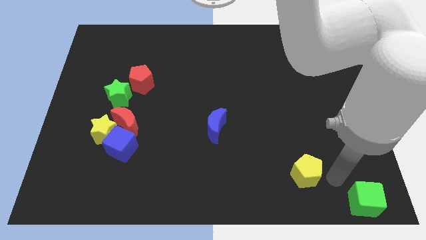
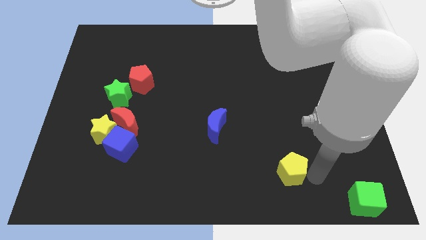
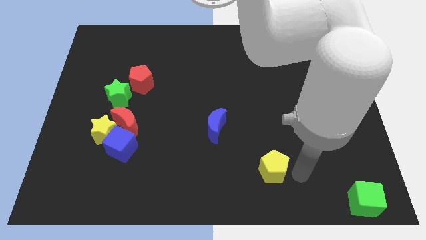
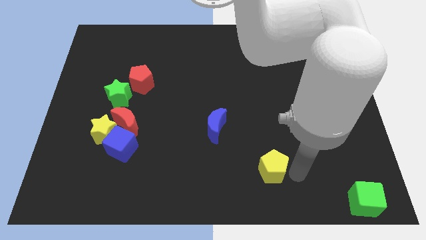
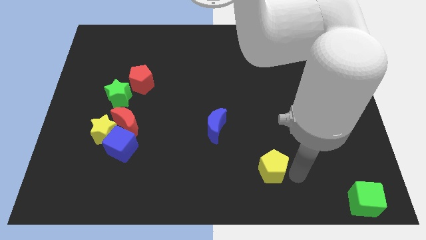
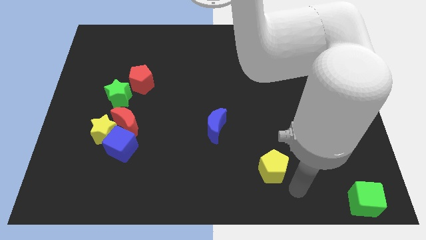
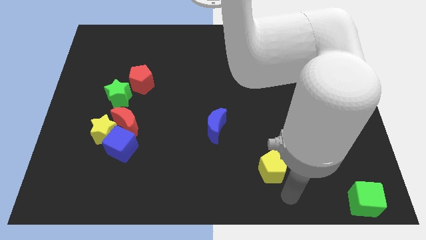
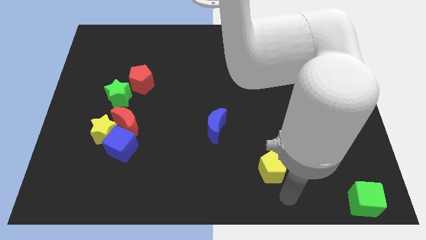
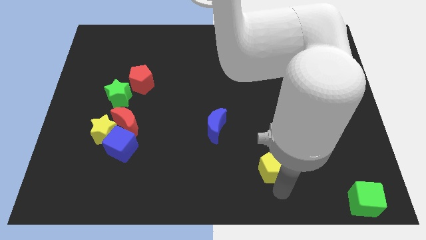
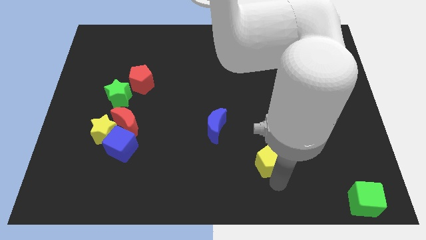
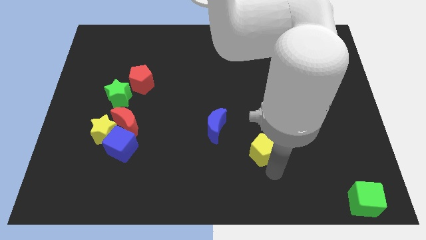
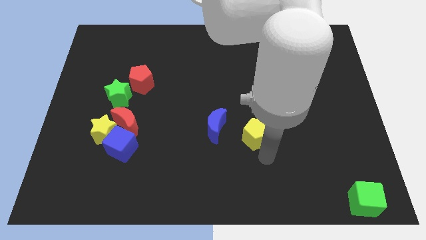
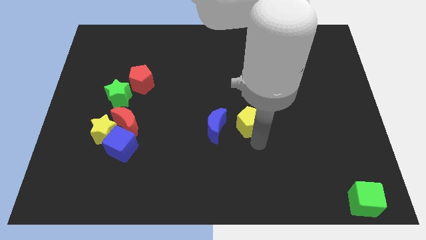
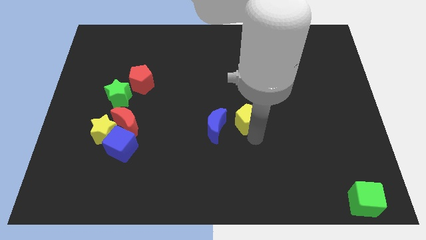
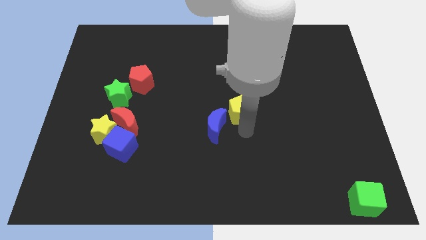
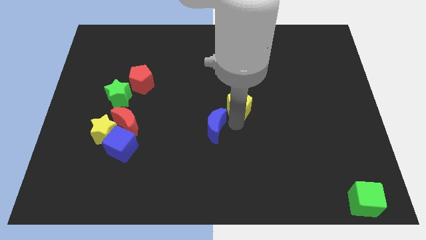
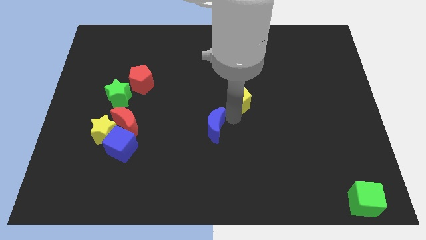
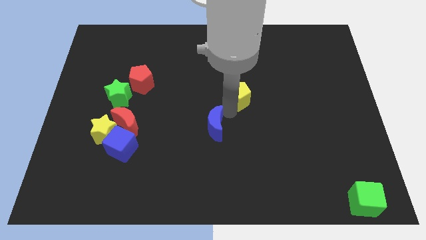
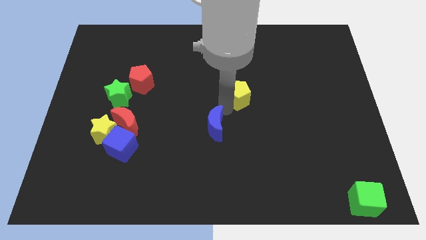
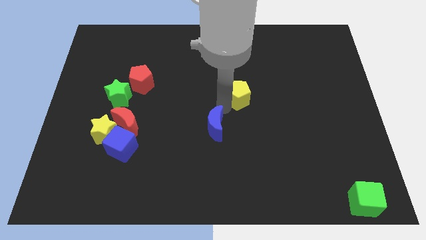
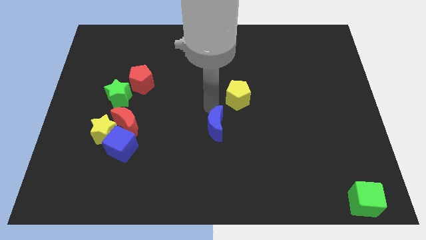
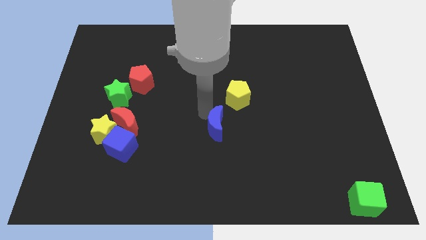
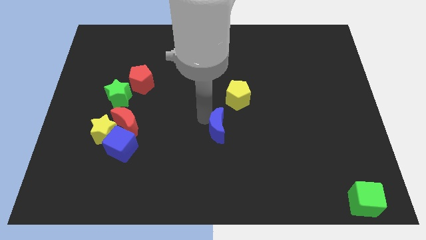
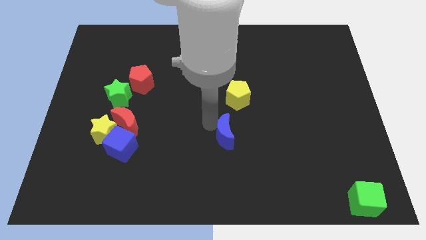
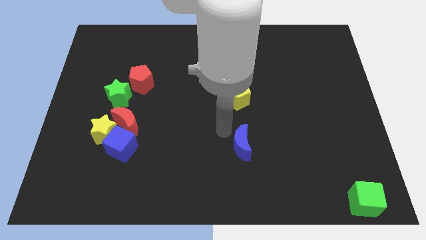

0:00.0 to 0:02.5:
place the yellow pentagon and the blue crescent in a vertical line

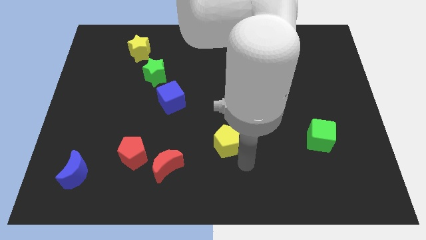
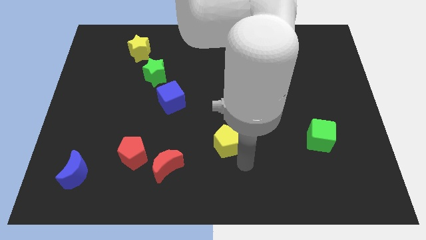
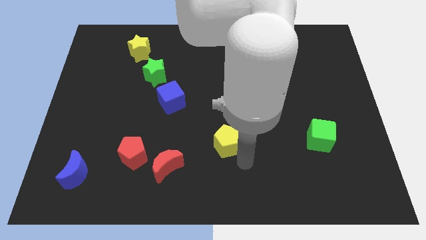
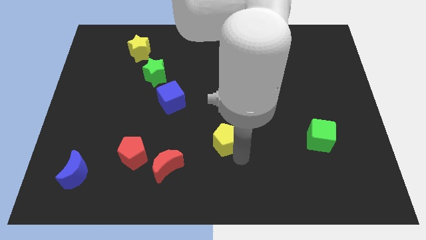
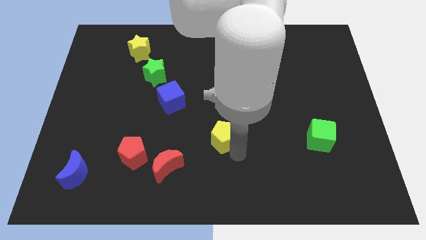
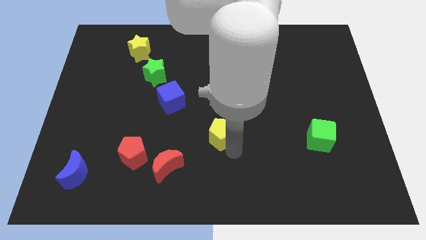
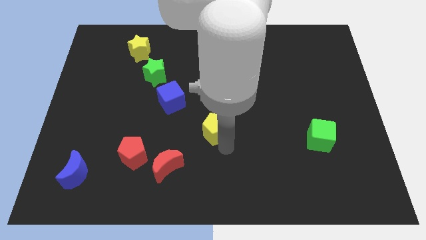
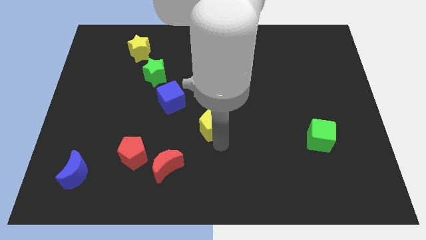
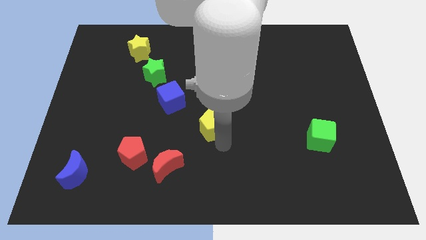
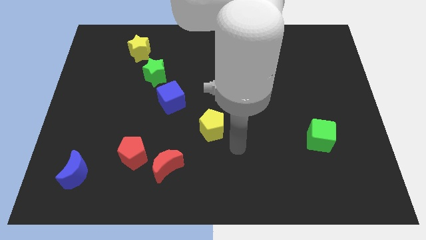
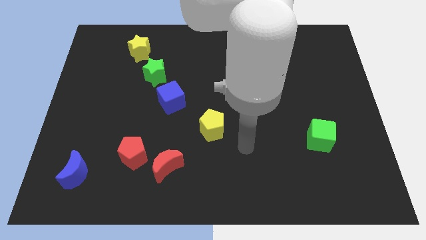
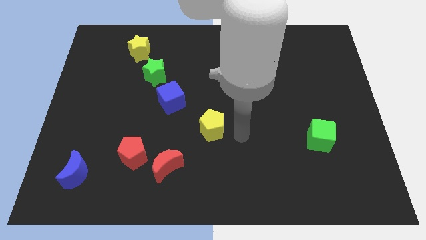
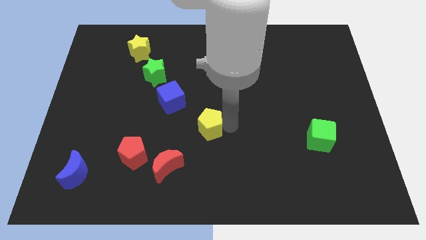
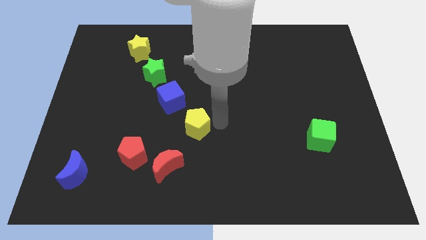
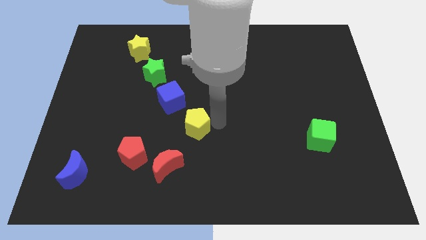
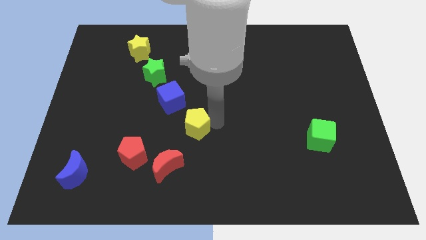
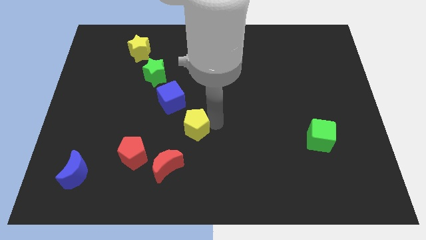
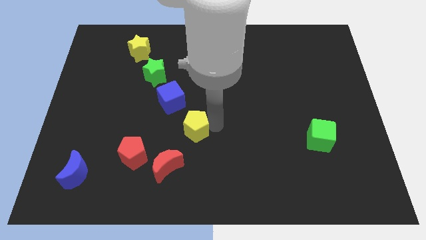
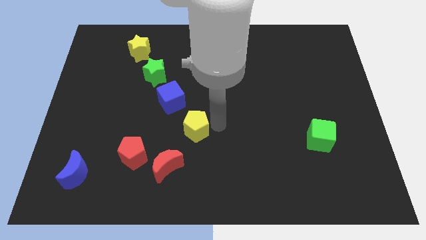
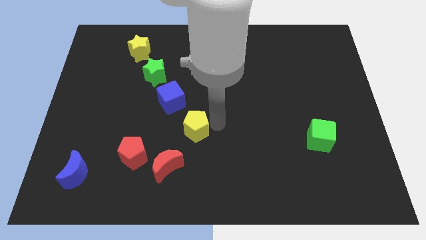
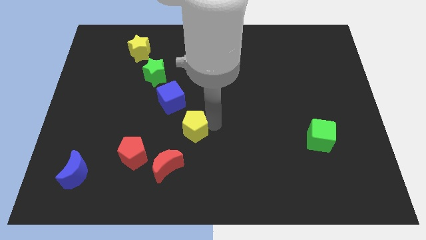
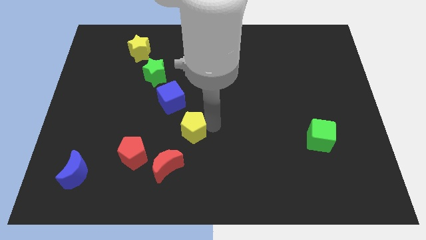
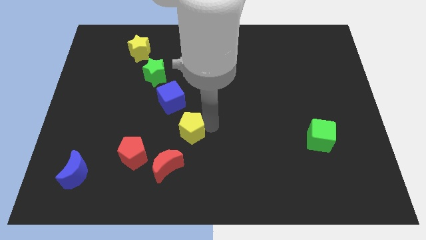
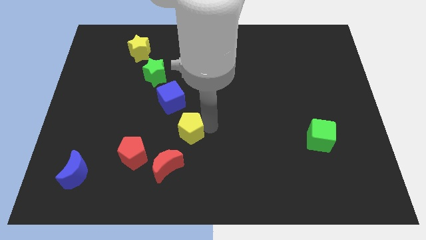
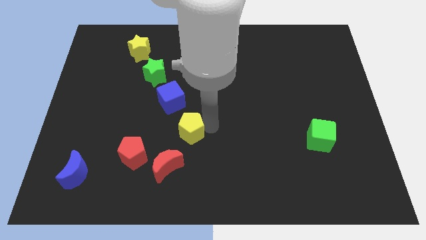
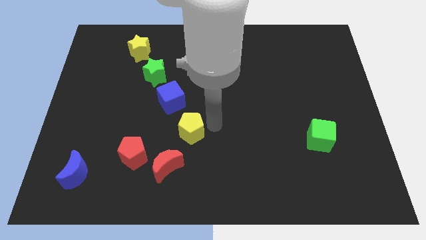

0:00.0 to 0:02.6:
place the yellow pentagon at the top right of the red moon

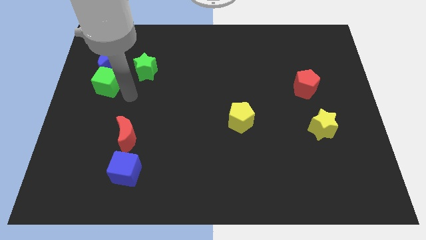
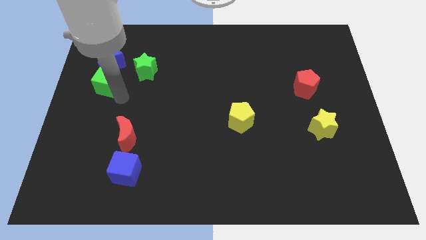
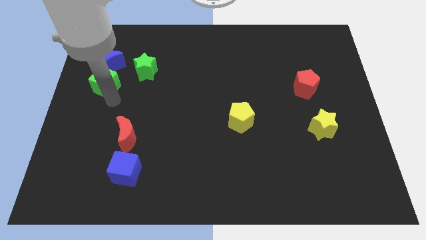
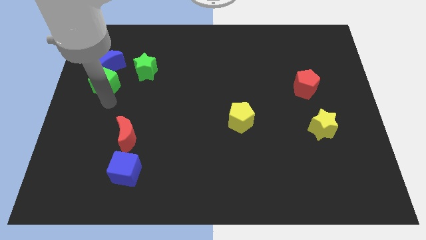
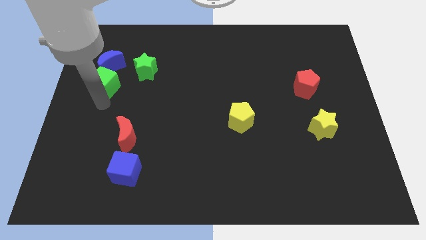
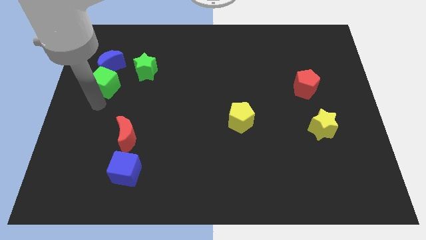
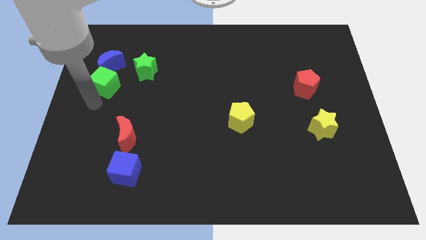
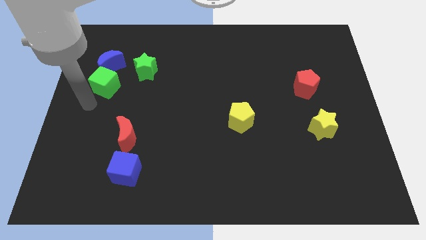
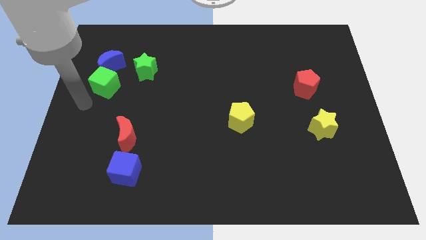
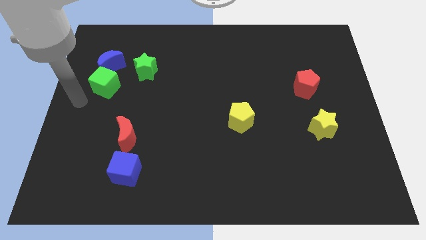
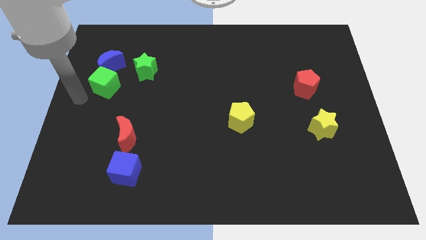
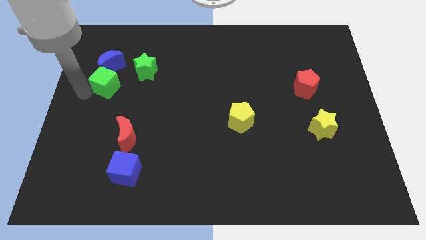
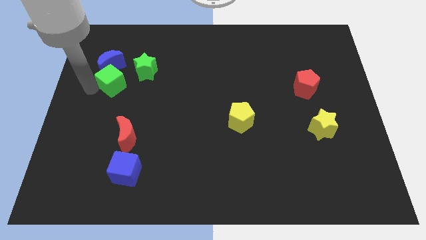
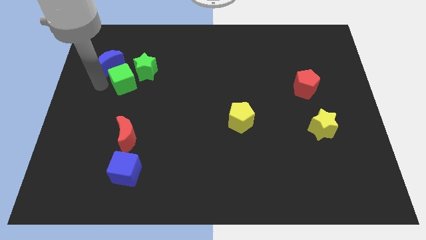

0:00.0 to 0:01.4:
push the green cube towards the green star

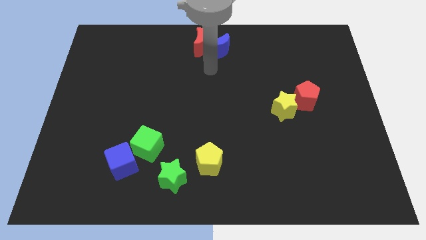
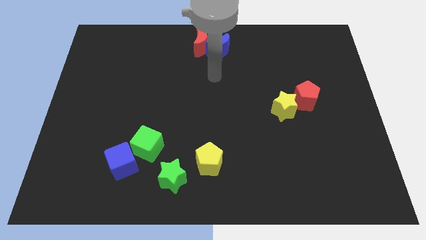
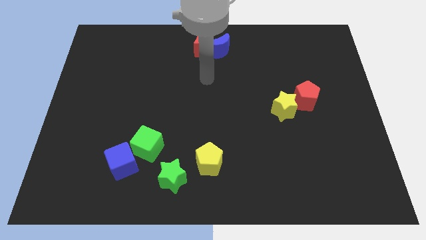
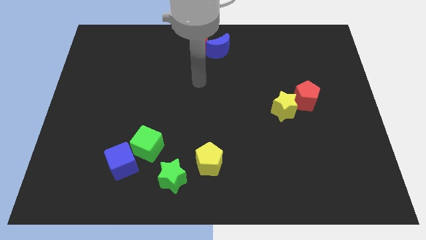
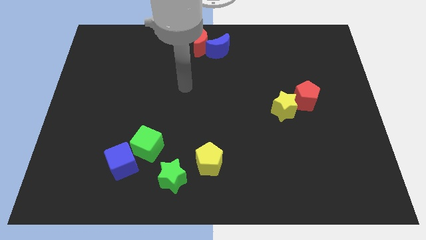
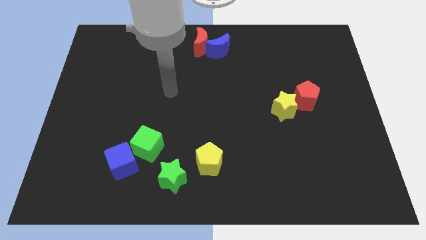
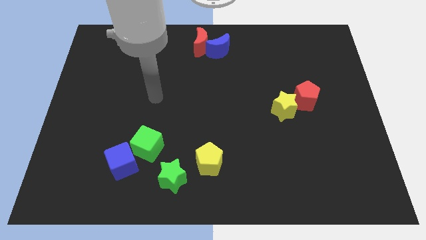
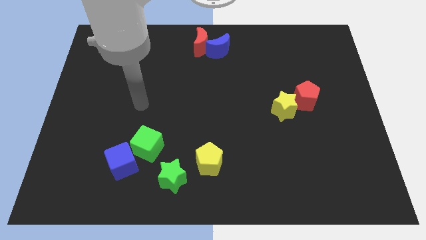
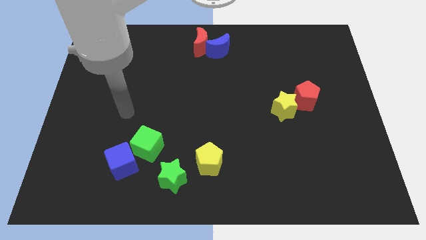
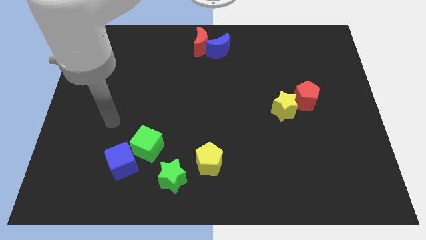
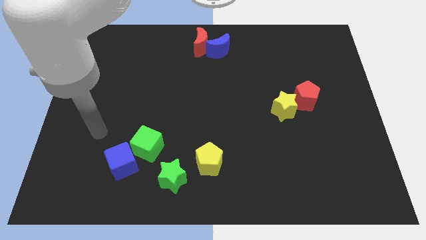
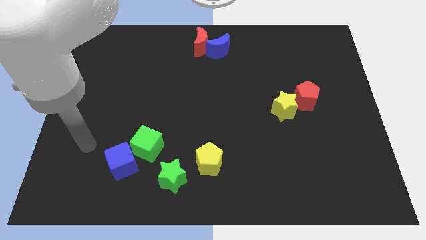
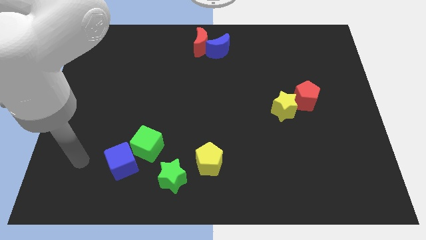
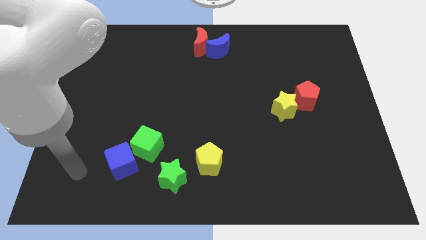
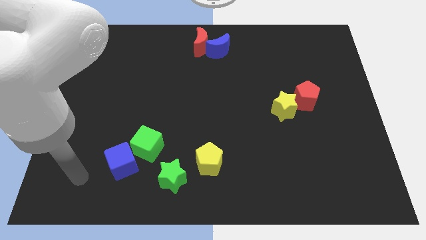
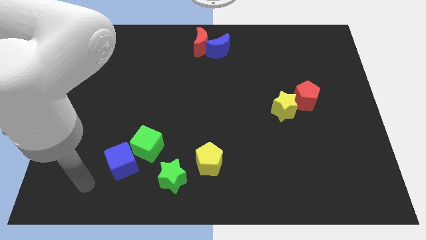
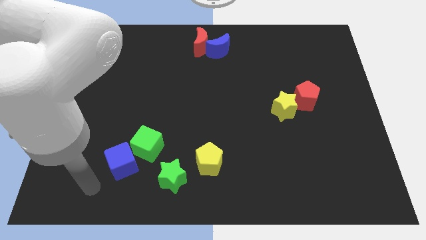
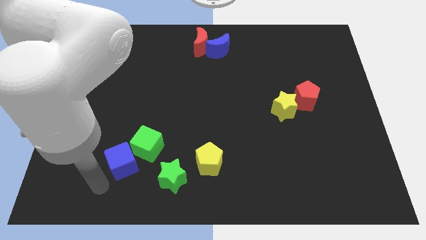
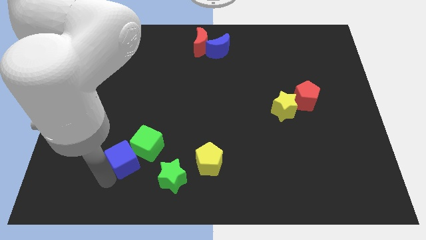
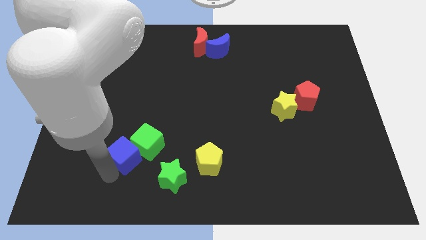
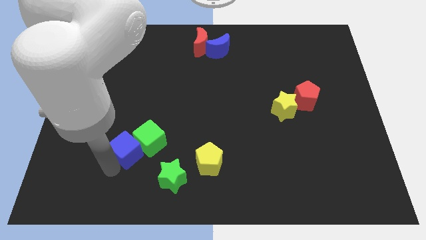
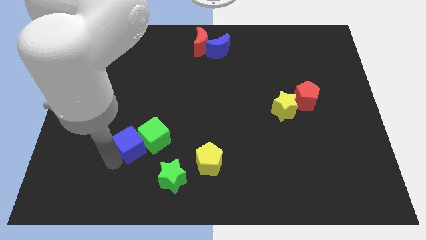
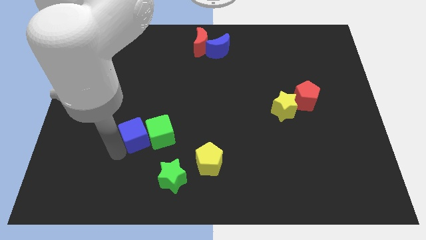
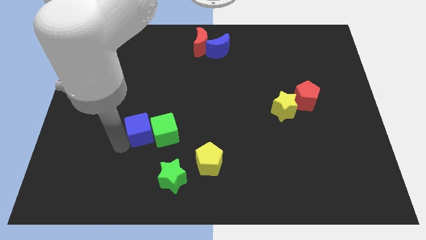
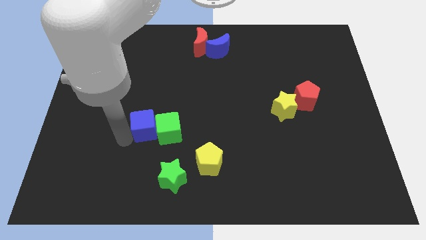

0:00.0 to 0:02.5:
move arm near blue cube

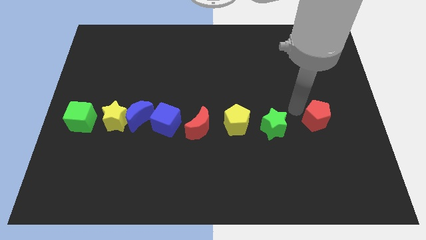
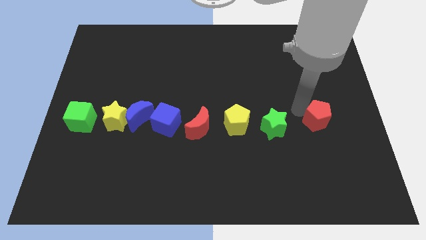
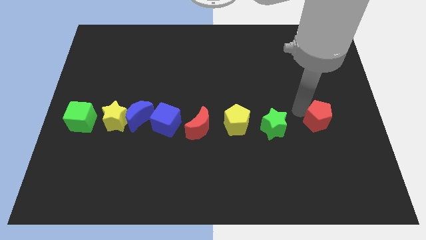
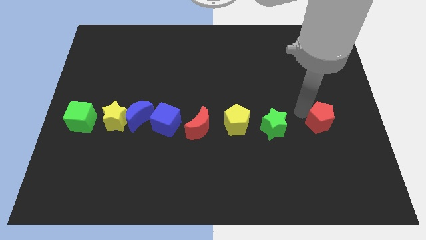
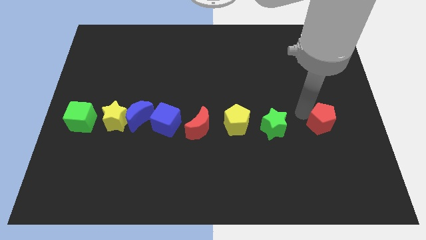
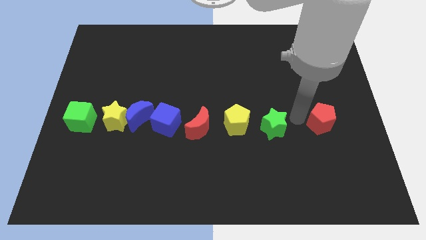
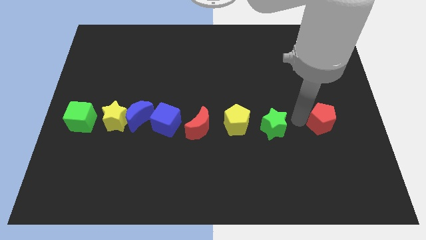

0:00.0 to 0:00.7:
push red pentagon beside yellow star
